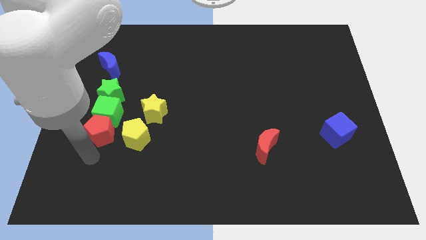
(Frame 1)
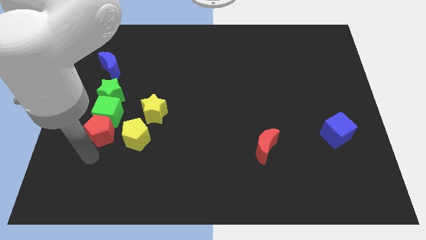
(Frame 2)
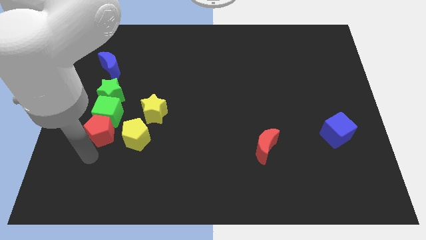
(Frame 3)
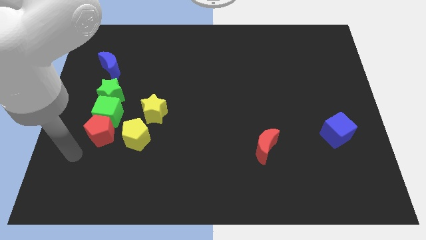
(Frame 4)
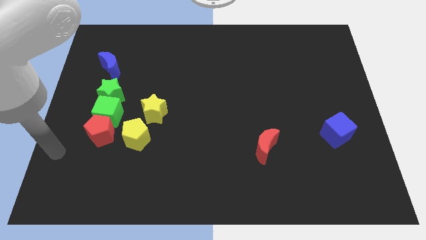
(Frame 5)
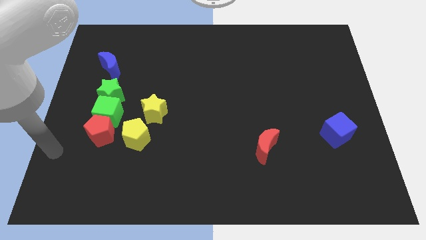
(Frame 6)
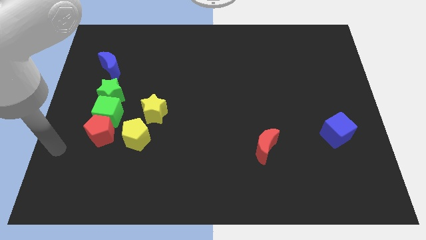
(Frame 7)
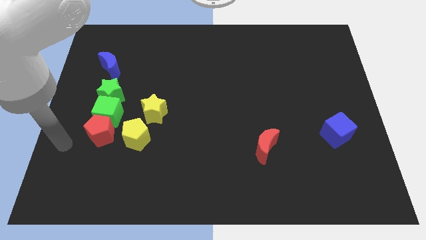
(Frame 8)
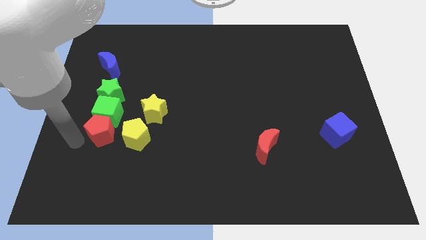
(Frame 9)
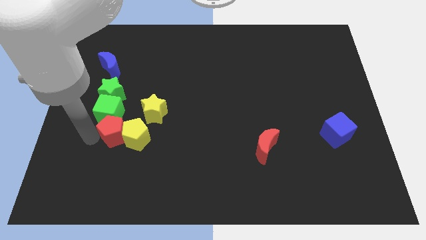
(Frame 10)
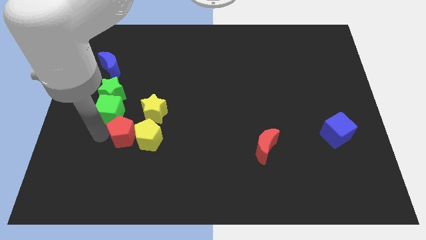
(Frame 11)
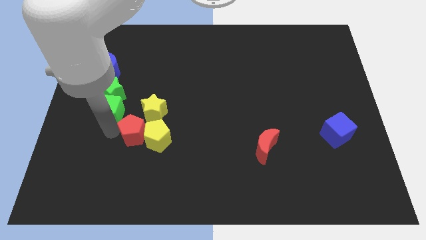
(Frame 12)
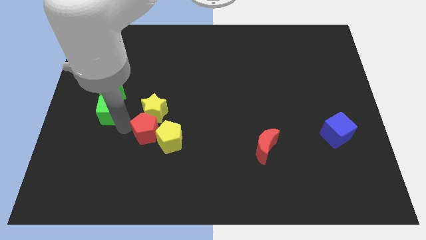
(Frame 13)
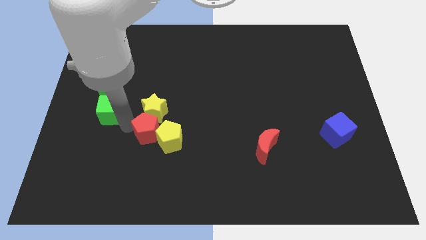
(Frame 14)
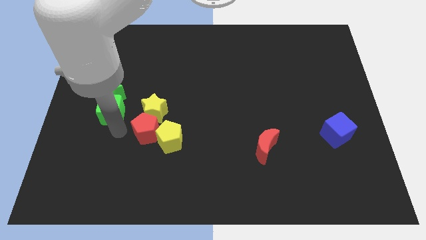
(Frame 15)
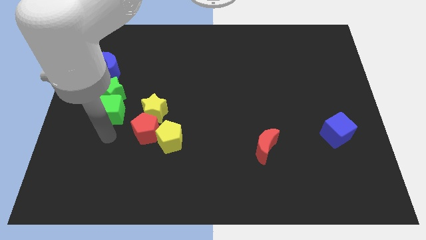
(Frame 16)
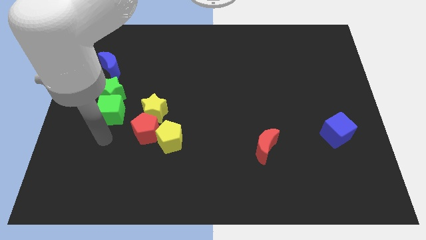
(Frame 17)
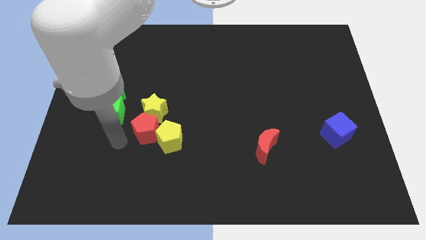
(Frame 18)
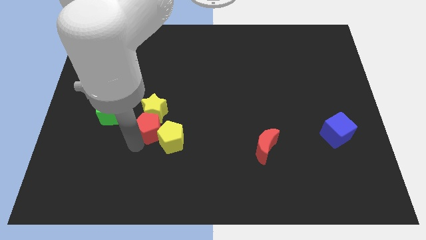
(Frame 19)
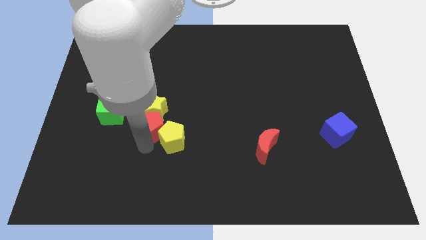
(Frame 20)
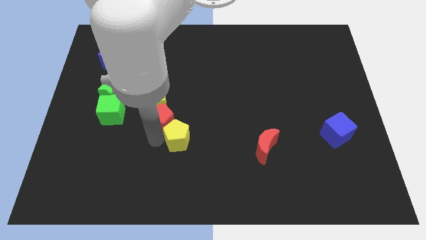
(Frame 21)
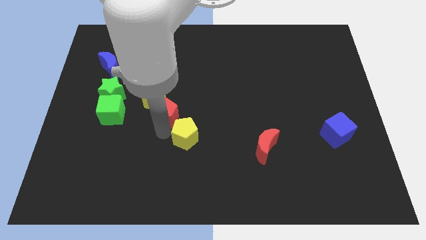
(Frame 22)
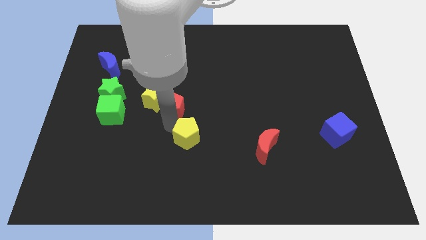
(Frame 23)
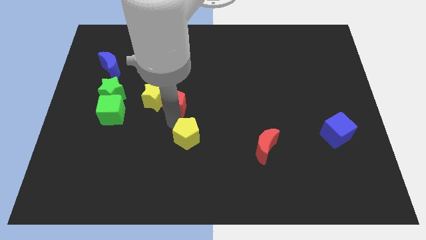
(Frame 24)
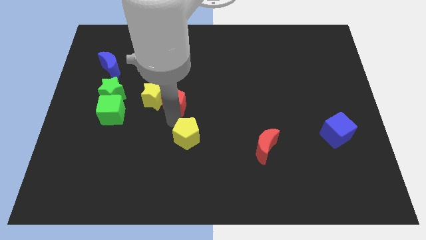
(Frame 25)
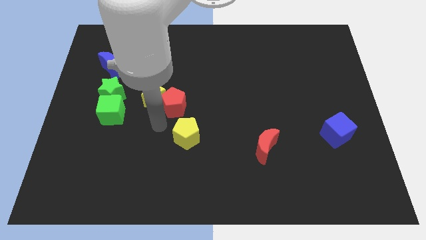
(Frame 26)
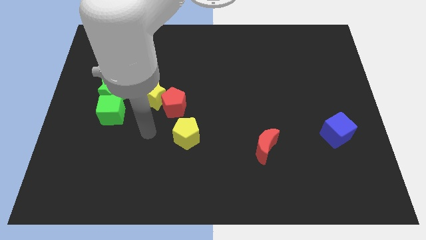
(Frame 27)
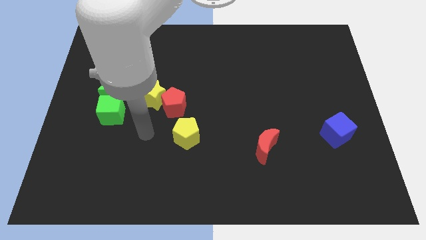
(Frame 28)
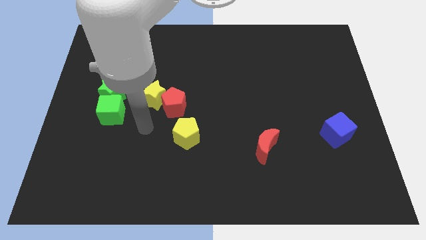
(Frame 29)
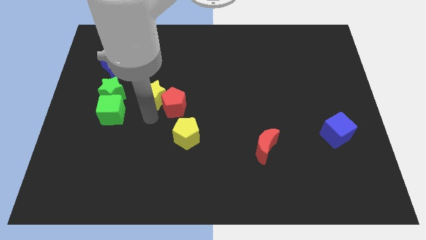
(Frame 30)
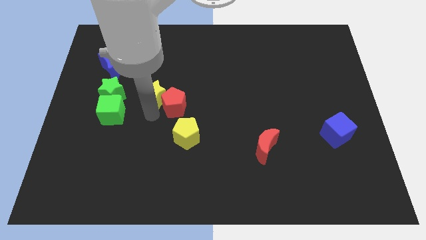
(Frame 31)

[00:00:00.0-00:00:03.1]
bring the red pentagon at the right side of the yellow star

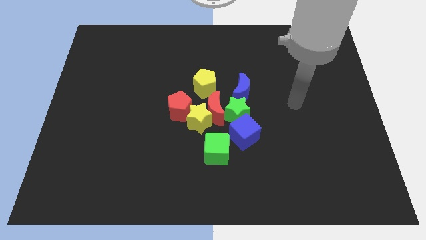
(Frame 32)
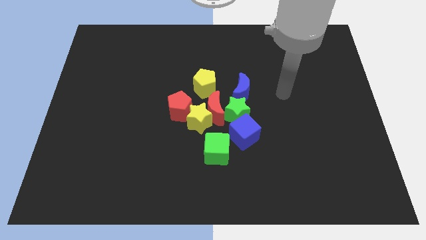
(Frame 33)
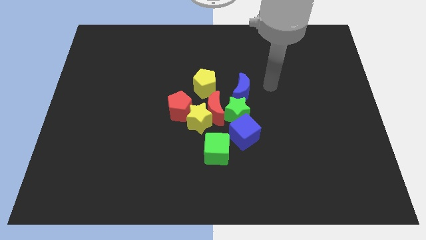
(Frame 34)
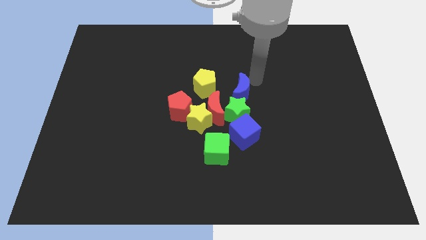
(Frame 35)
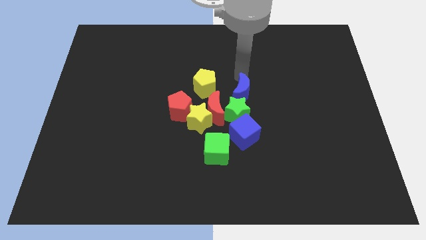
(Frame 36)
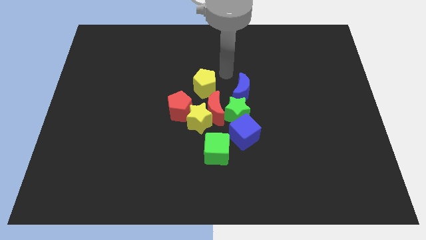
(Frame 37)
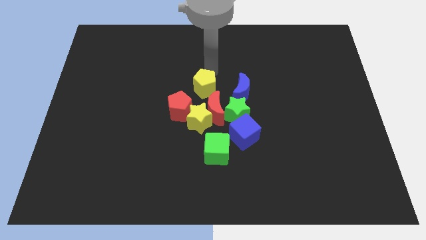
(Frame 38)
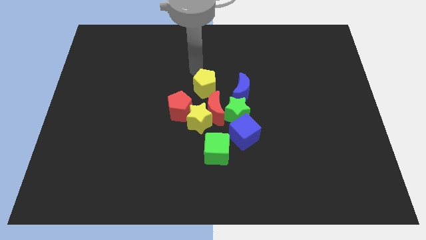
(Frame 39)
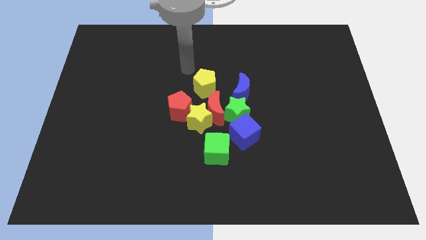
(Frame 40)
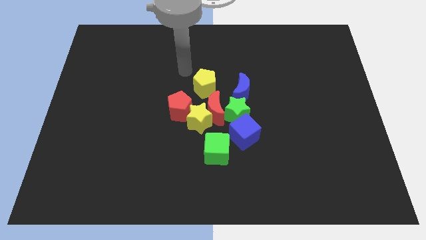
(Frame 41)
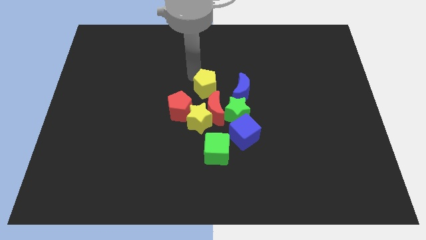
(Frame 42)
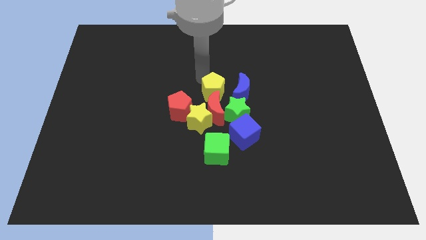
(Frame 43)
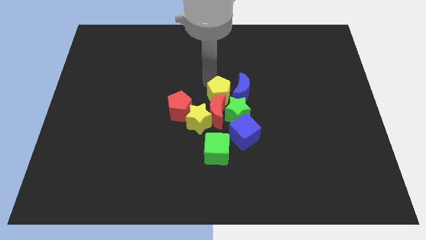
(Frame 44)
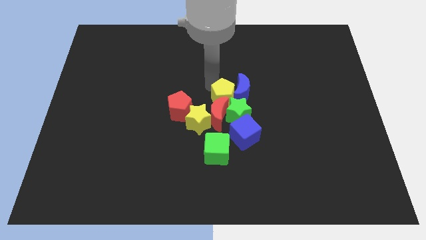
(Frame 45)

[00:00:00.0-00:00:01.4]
move the yellow pentagon into the red moon

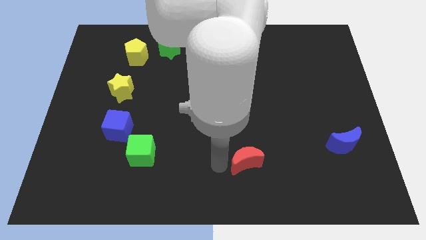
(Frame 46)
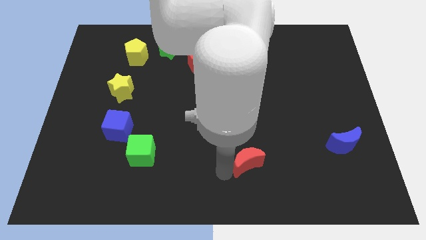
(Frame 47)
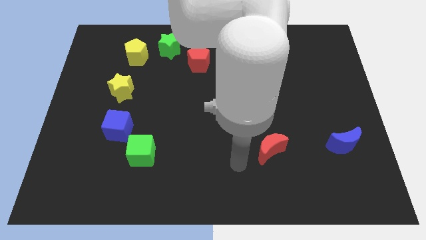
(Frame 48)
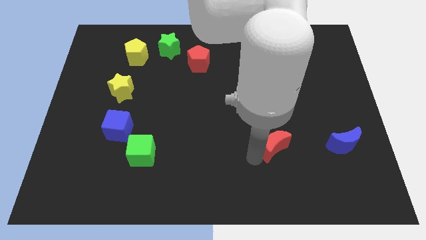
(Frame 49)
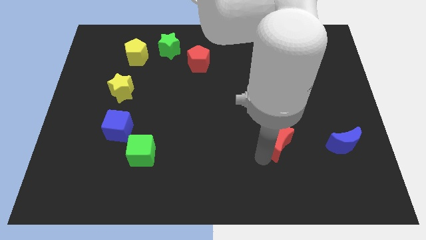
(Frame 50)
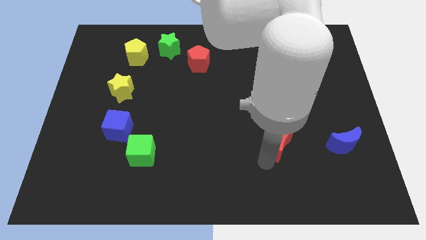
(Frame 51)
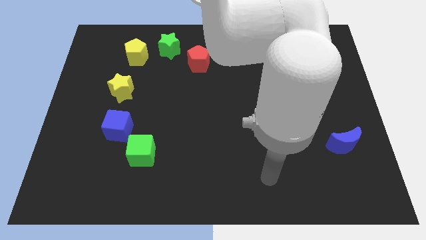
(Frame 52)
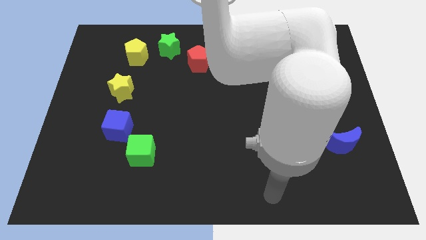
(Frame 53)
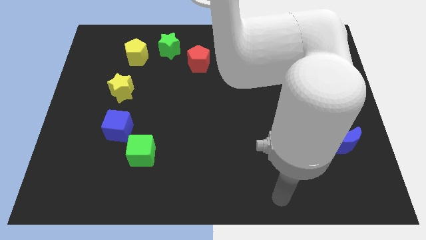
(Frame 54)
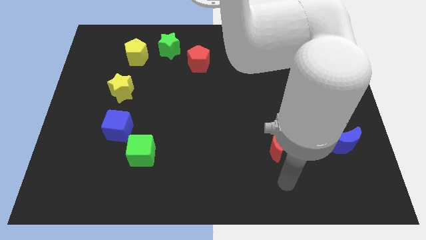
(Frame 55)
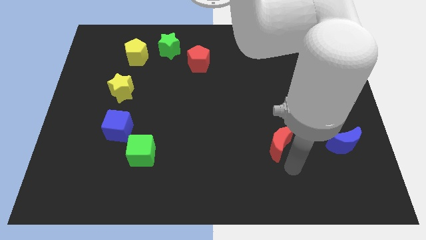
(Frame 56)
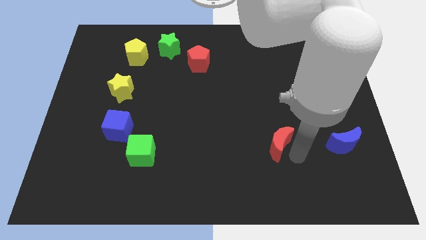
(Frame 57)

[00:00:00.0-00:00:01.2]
place the red crescent to the left side of the blue crescent

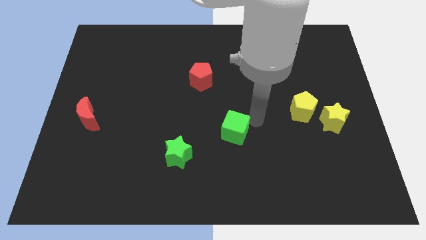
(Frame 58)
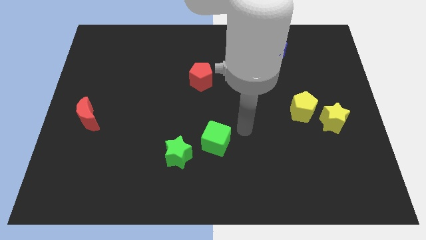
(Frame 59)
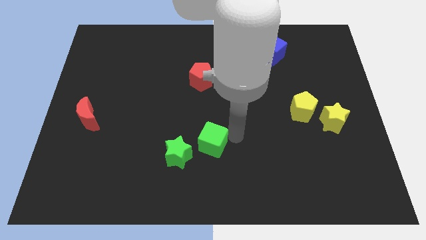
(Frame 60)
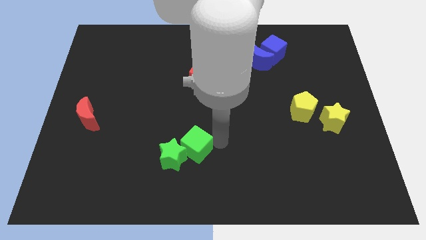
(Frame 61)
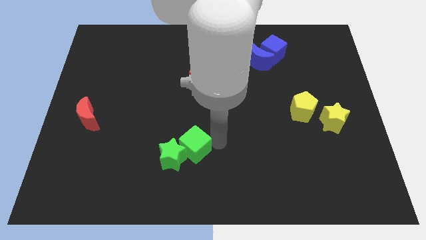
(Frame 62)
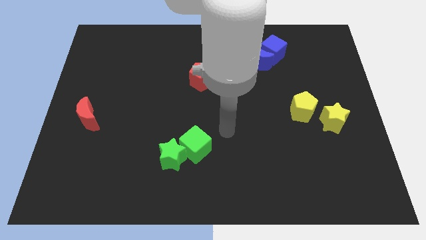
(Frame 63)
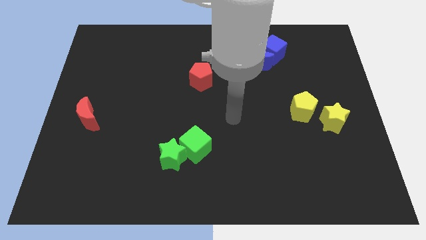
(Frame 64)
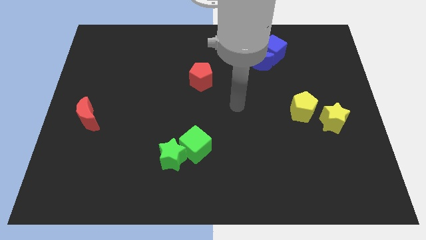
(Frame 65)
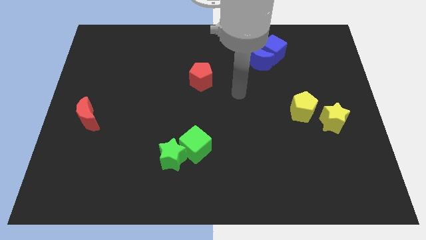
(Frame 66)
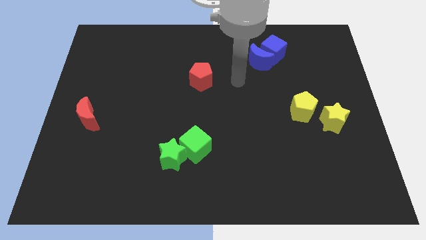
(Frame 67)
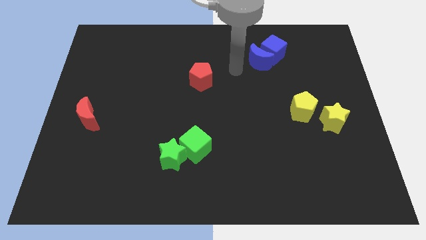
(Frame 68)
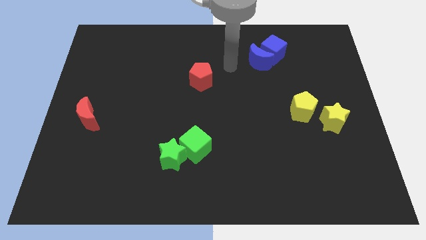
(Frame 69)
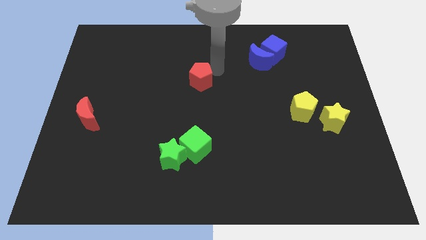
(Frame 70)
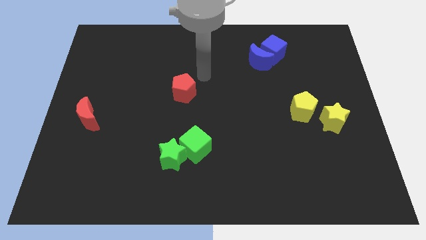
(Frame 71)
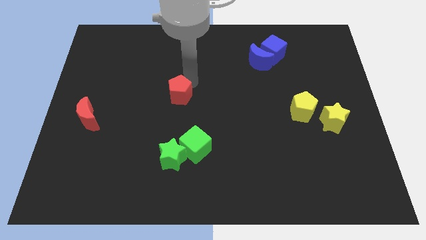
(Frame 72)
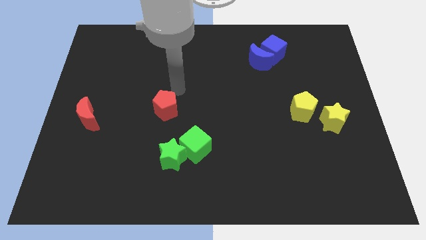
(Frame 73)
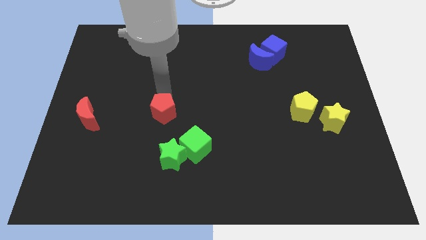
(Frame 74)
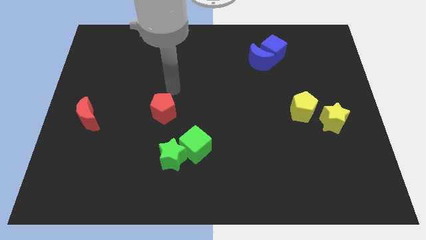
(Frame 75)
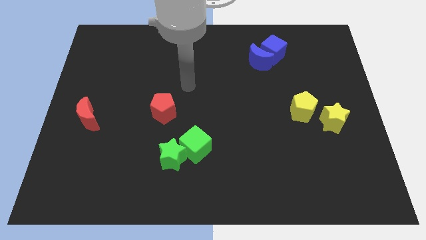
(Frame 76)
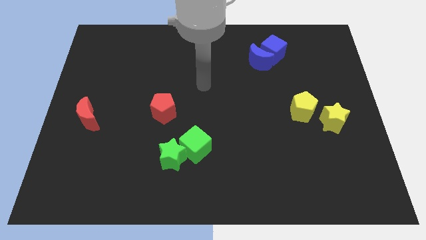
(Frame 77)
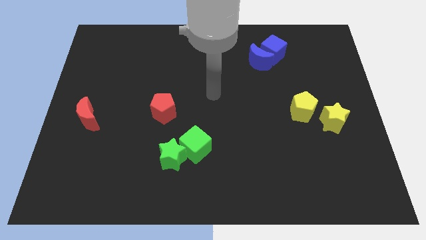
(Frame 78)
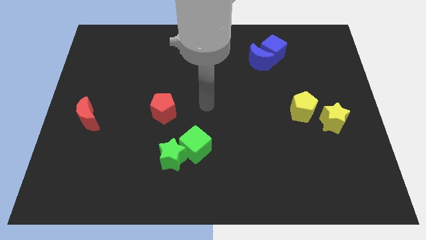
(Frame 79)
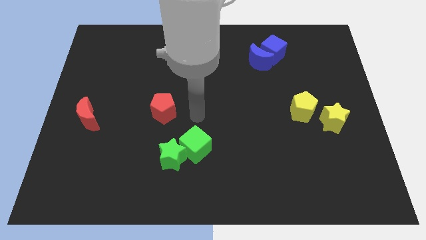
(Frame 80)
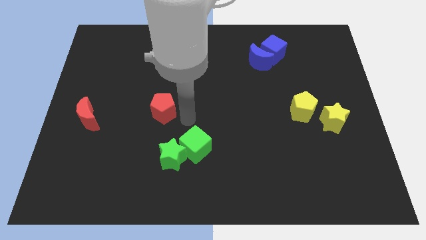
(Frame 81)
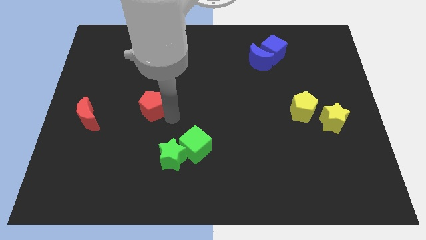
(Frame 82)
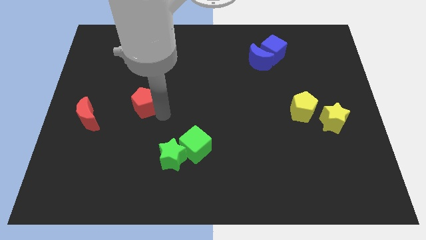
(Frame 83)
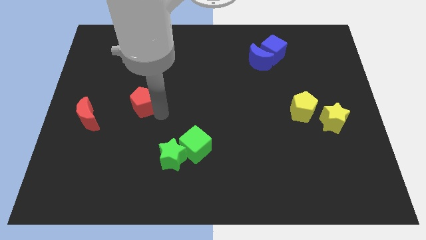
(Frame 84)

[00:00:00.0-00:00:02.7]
put the green blocks together

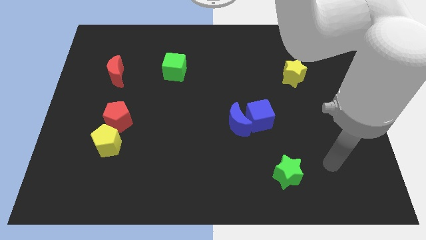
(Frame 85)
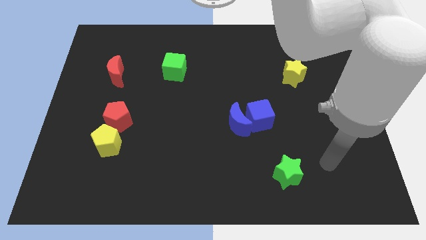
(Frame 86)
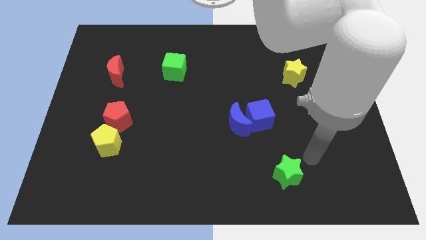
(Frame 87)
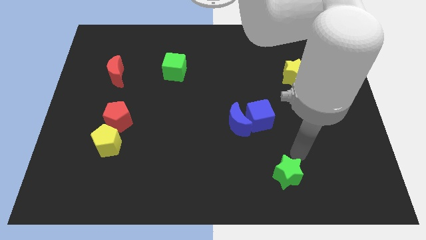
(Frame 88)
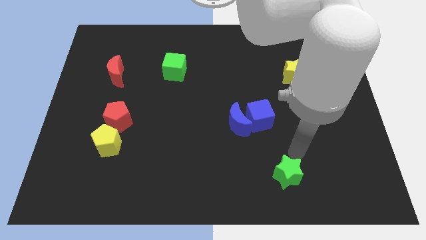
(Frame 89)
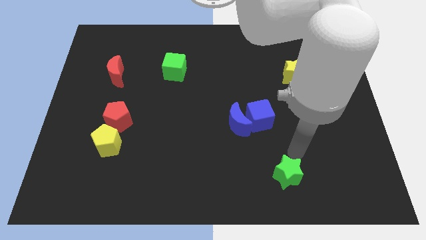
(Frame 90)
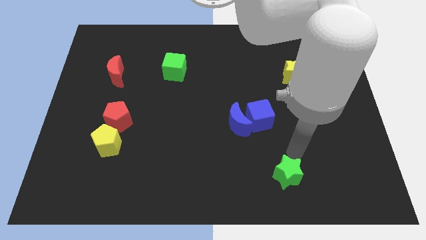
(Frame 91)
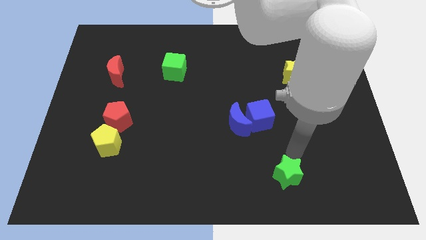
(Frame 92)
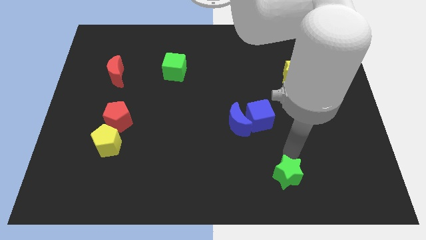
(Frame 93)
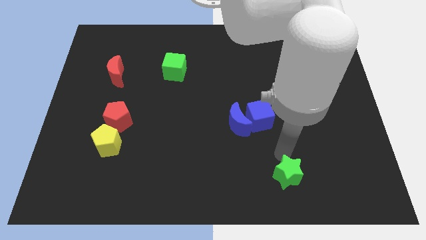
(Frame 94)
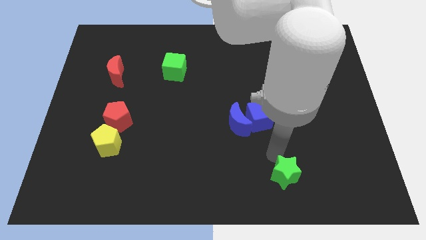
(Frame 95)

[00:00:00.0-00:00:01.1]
place your arm on top of green star
